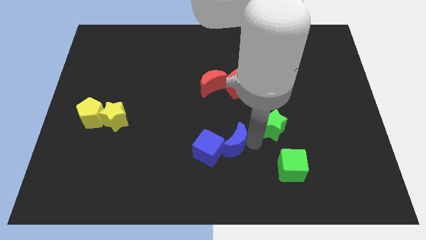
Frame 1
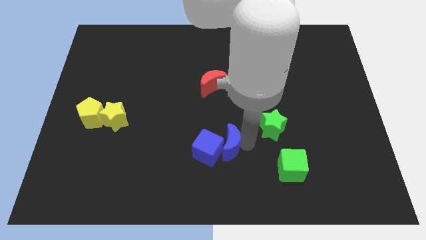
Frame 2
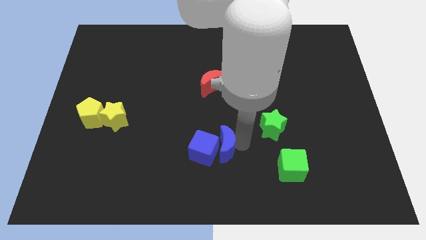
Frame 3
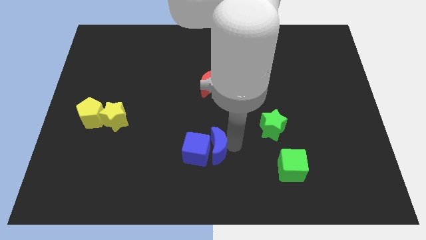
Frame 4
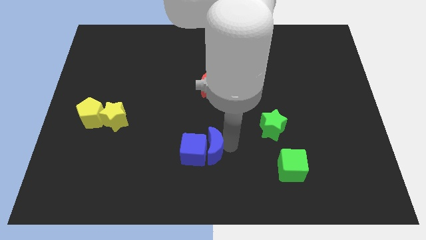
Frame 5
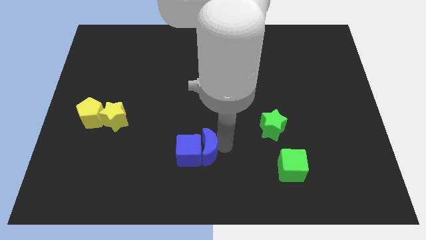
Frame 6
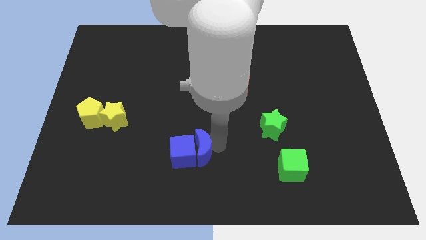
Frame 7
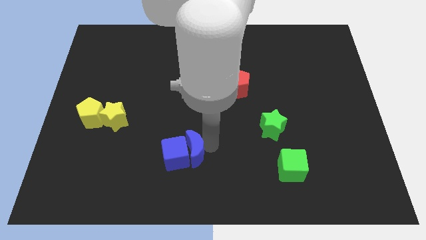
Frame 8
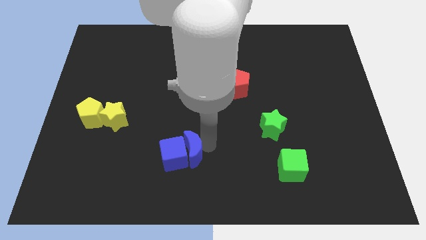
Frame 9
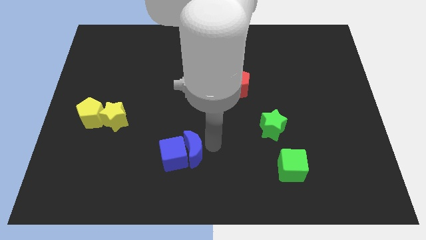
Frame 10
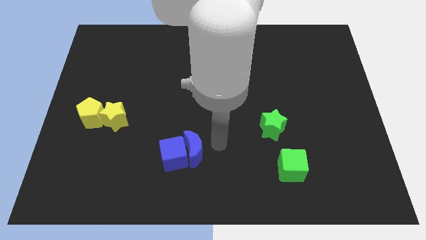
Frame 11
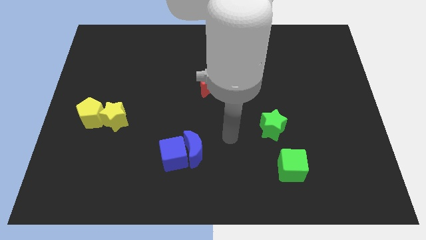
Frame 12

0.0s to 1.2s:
move blue crescent with blue cube slightly to the left

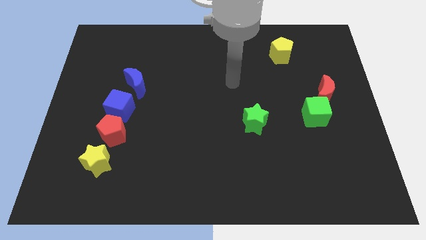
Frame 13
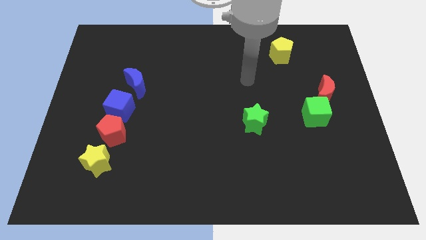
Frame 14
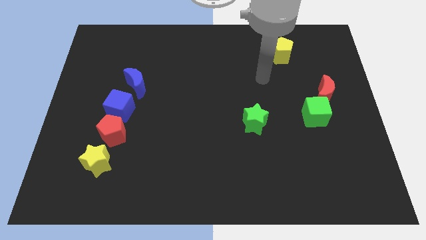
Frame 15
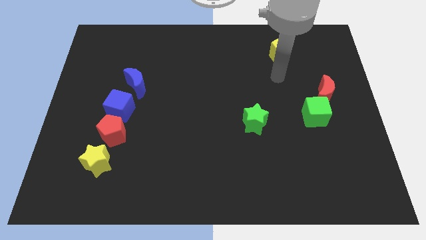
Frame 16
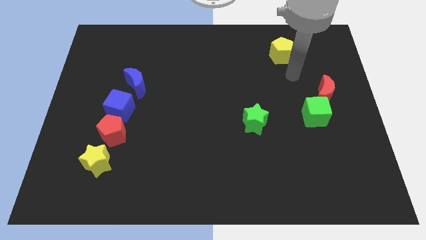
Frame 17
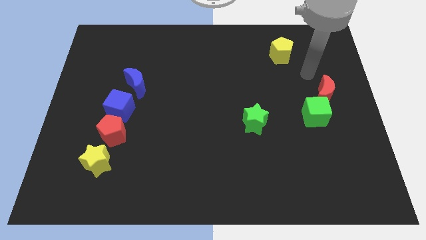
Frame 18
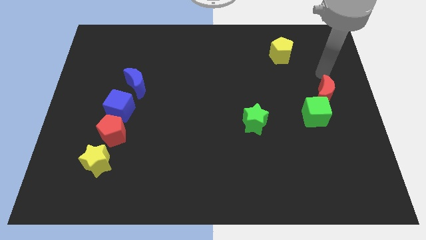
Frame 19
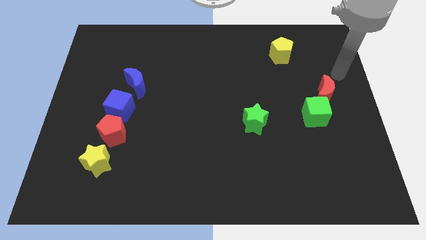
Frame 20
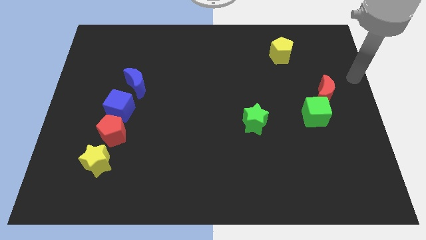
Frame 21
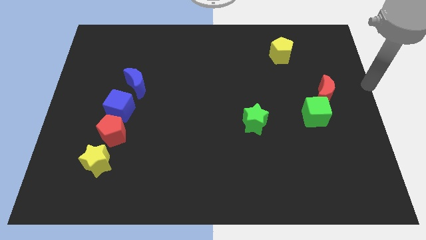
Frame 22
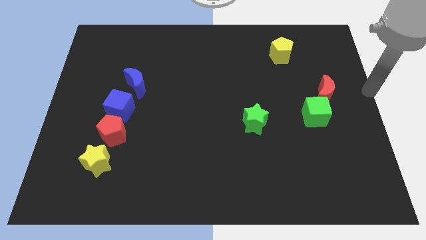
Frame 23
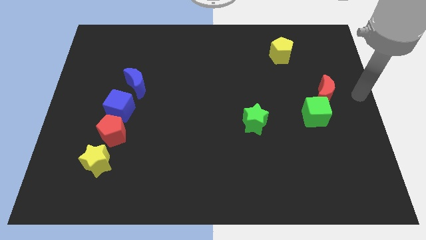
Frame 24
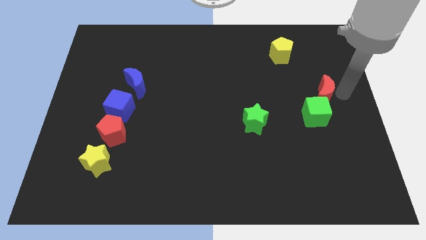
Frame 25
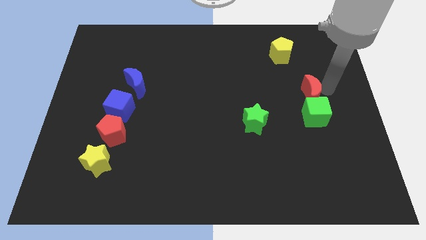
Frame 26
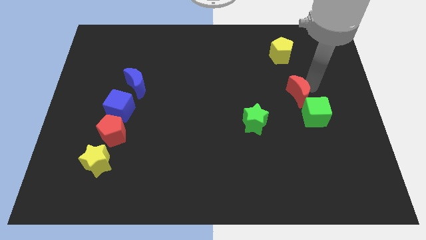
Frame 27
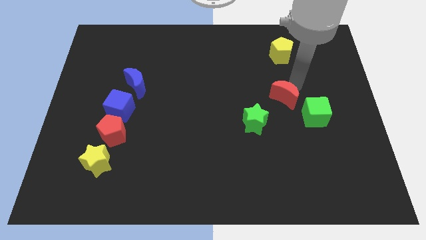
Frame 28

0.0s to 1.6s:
move the red moon slightly to the left

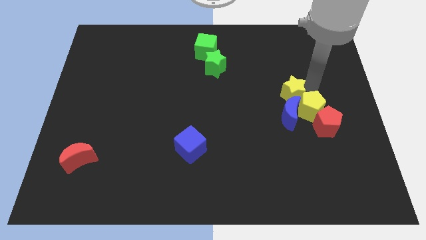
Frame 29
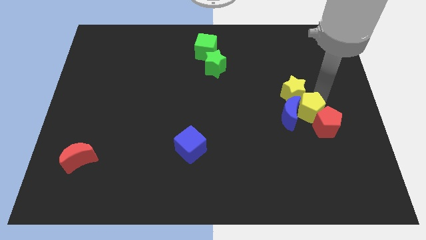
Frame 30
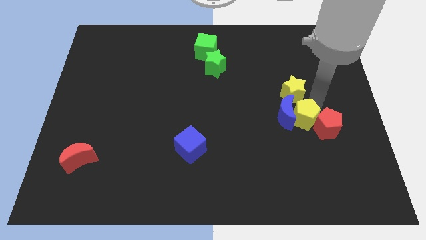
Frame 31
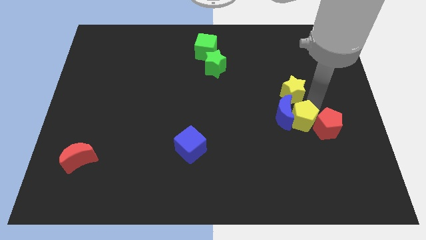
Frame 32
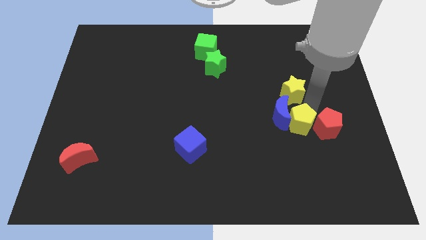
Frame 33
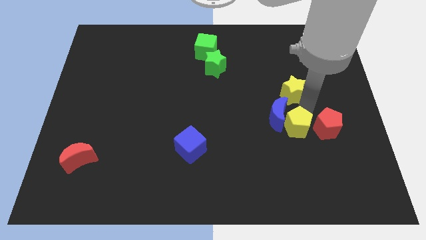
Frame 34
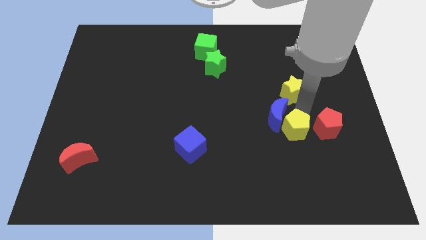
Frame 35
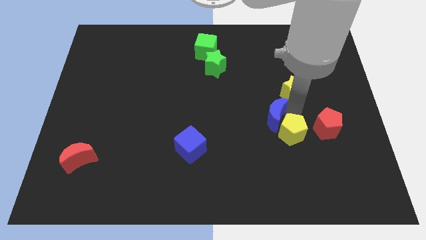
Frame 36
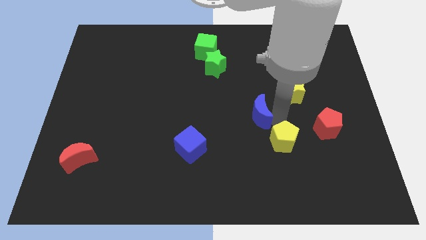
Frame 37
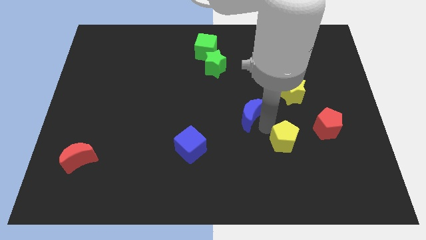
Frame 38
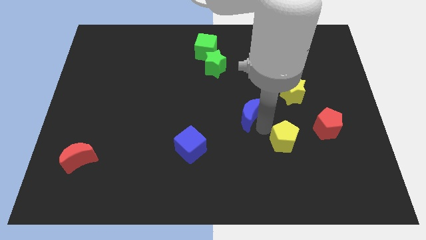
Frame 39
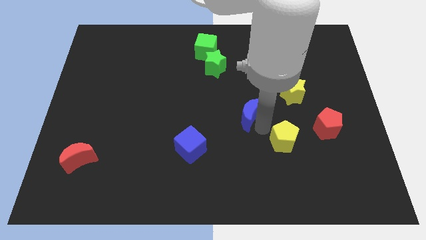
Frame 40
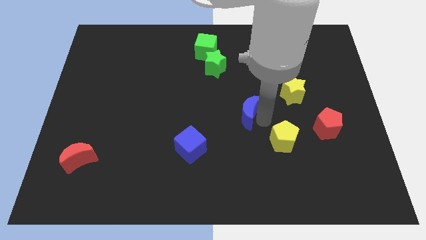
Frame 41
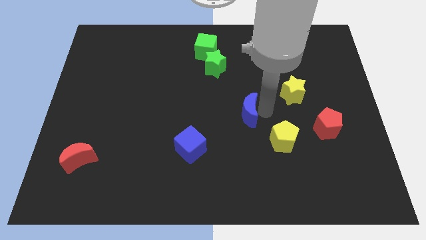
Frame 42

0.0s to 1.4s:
separate the yellow pentagon from the yellow star

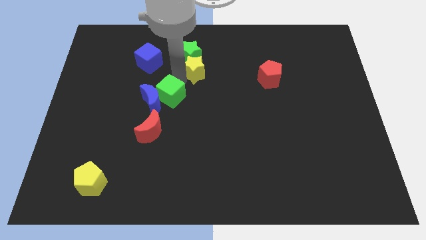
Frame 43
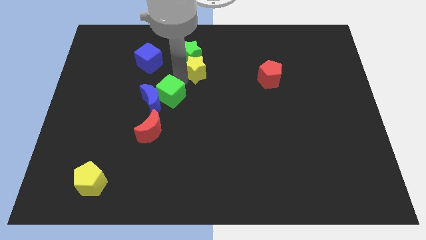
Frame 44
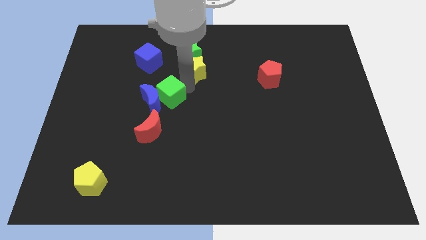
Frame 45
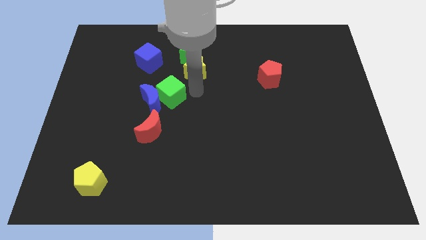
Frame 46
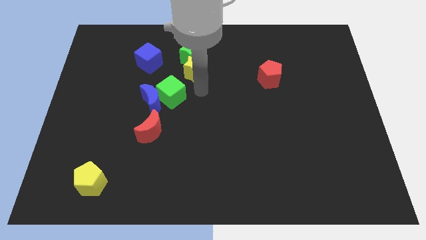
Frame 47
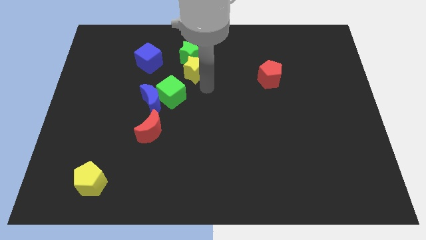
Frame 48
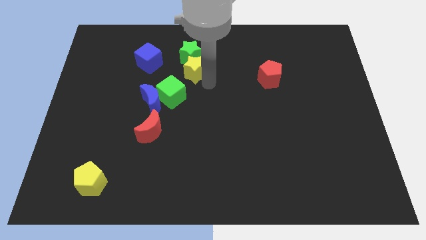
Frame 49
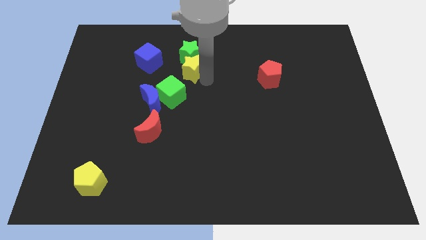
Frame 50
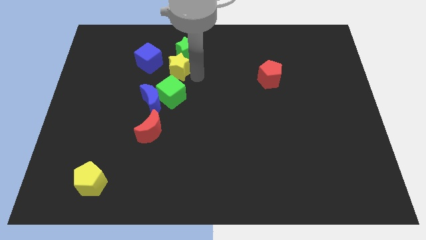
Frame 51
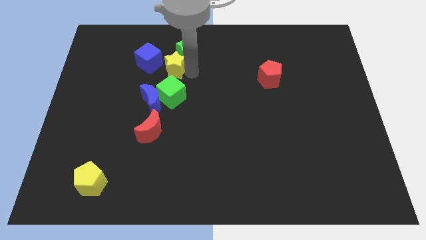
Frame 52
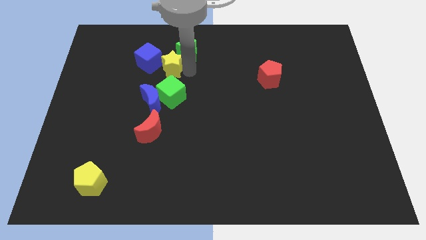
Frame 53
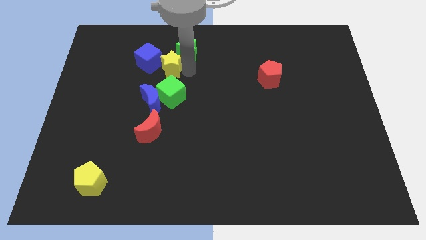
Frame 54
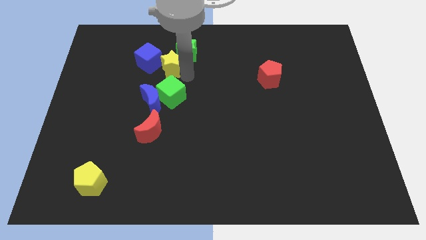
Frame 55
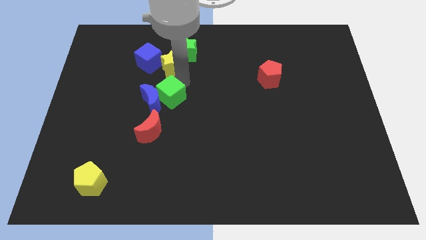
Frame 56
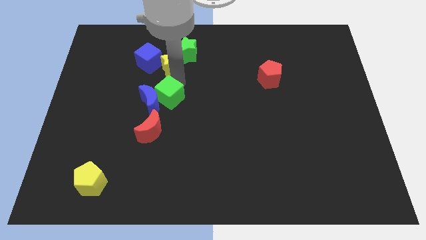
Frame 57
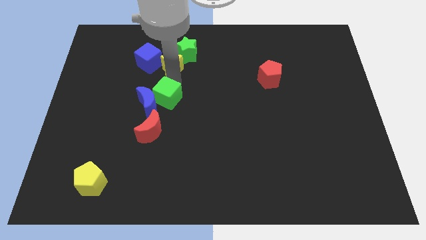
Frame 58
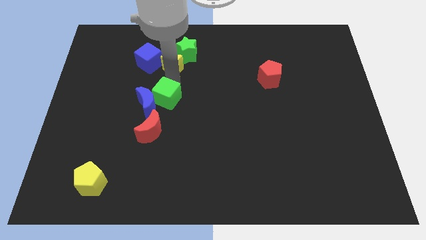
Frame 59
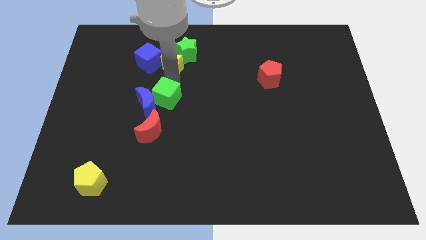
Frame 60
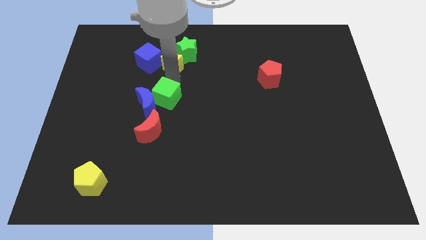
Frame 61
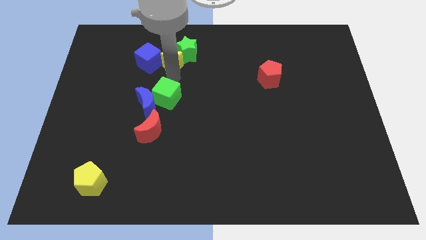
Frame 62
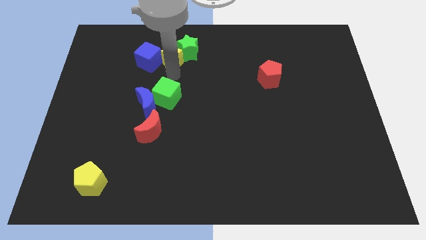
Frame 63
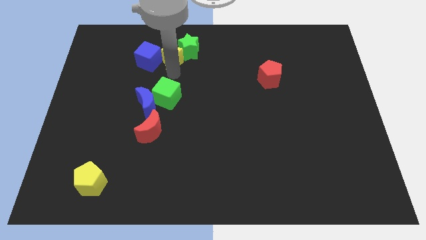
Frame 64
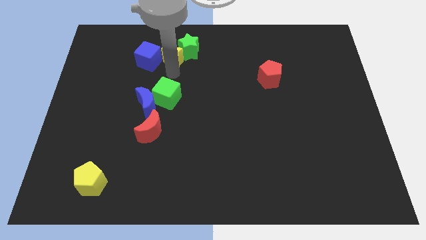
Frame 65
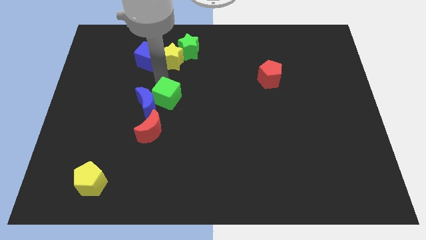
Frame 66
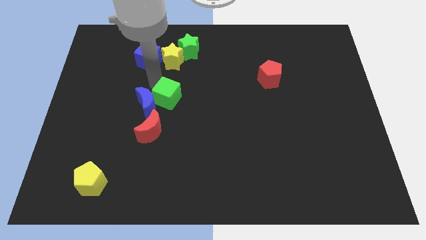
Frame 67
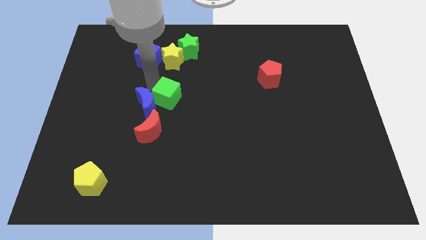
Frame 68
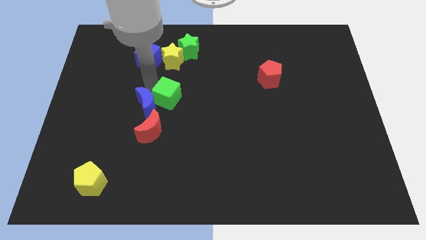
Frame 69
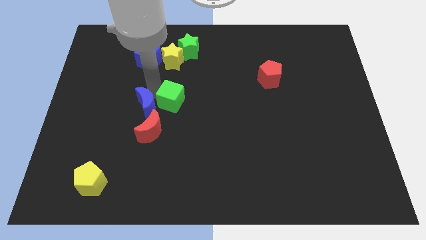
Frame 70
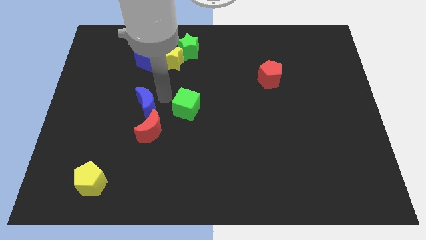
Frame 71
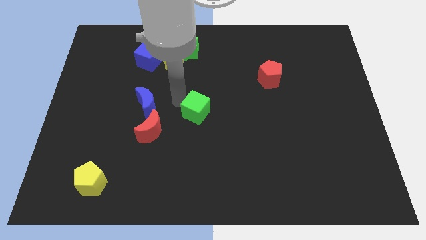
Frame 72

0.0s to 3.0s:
push green cube below green star

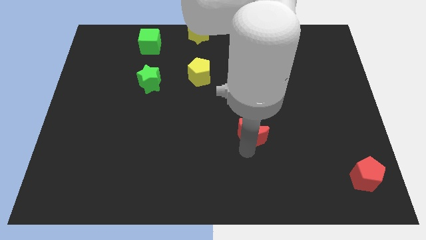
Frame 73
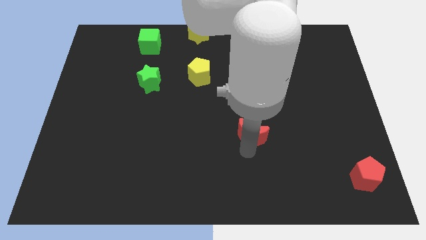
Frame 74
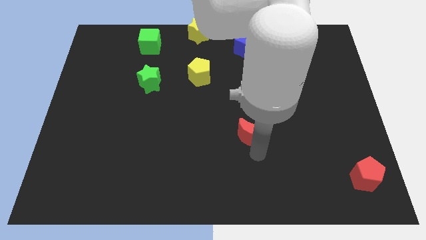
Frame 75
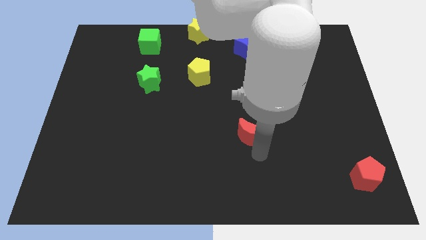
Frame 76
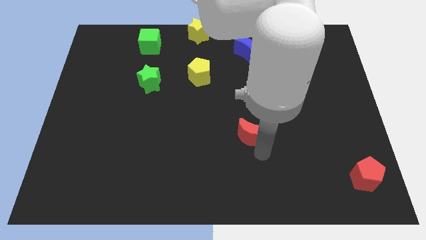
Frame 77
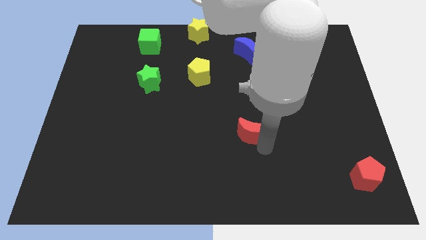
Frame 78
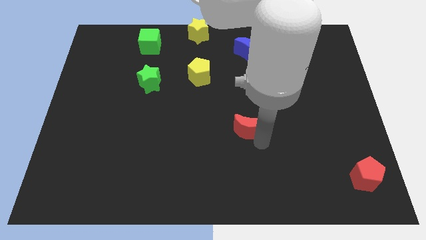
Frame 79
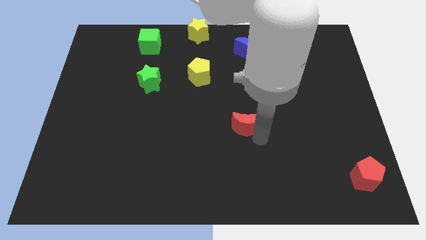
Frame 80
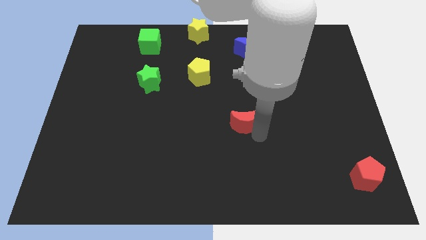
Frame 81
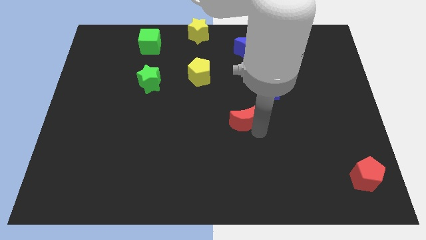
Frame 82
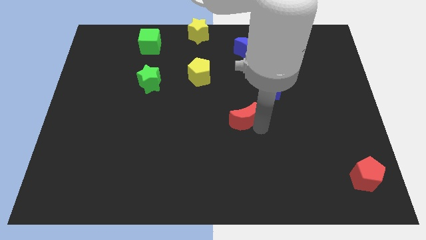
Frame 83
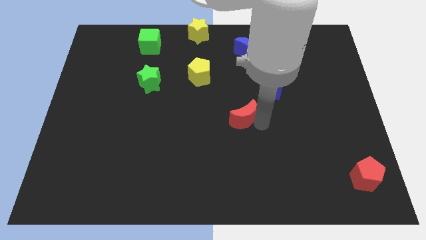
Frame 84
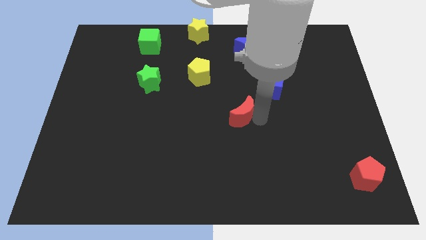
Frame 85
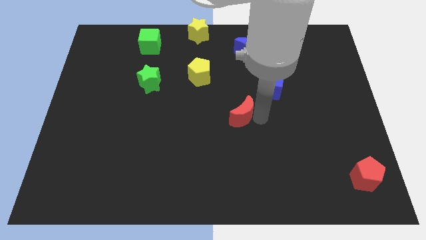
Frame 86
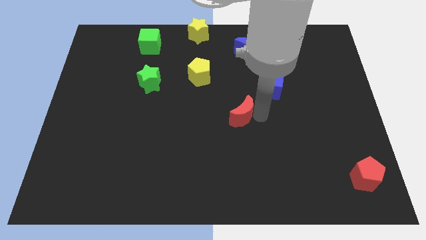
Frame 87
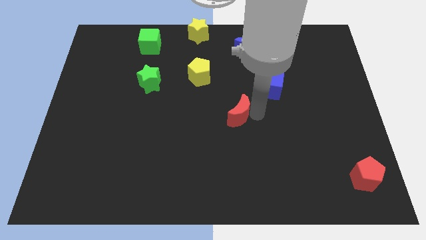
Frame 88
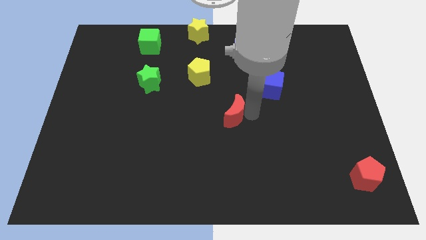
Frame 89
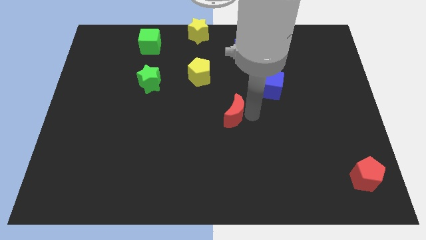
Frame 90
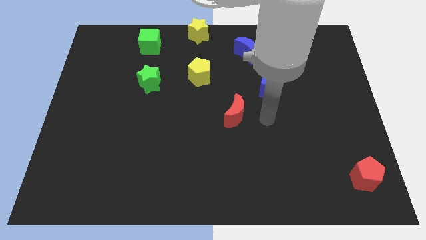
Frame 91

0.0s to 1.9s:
place the red moon diagonal to the blue cube
